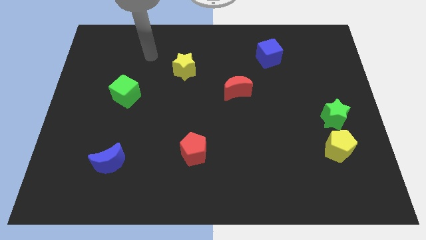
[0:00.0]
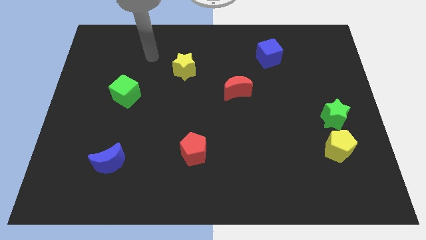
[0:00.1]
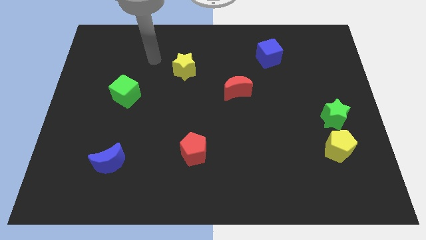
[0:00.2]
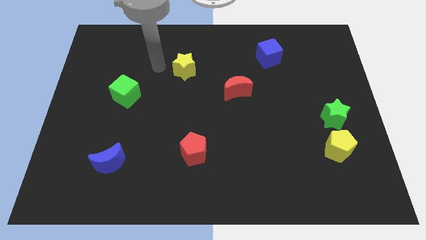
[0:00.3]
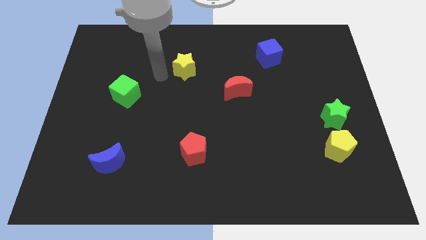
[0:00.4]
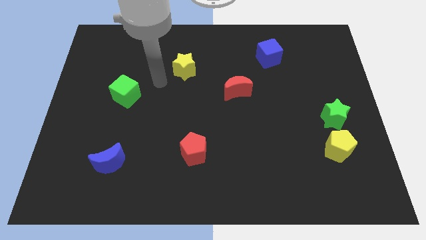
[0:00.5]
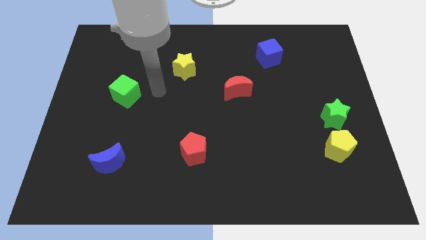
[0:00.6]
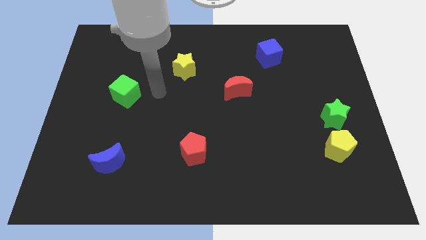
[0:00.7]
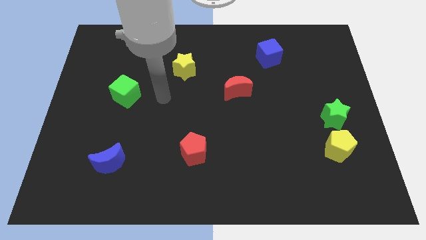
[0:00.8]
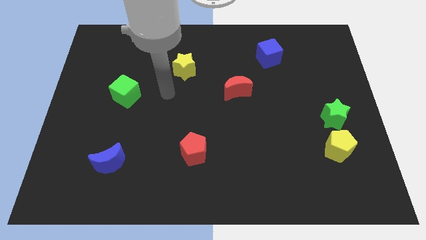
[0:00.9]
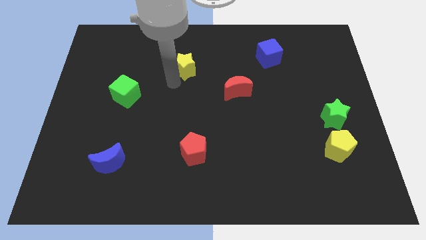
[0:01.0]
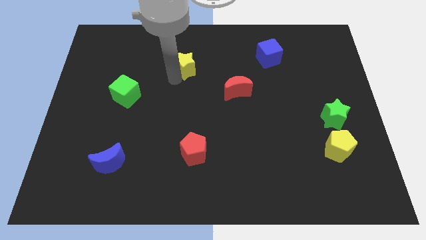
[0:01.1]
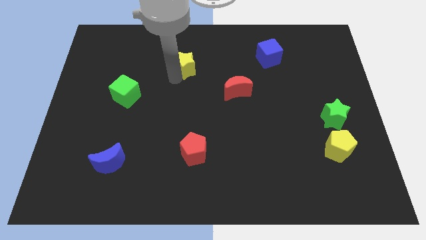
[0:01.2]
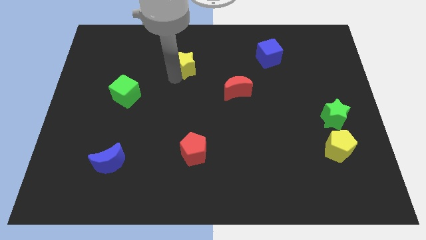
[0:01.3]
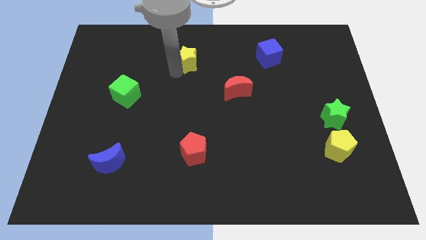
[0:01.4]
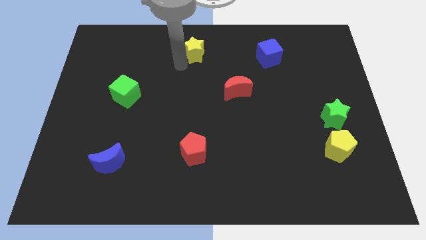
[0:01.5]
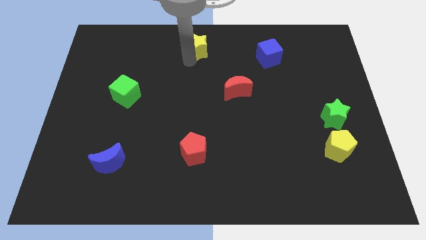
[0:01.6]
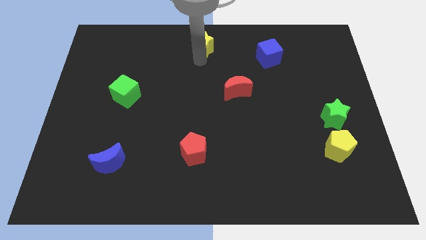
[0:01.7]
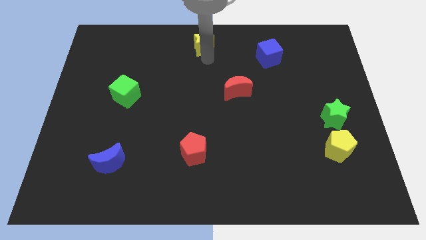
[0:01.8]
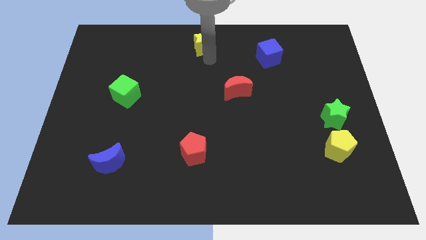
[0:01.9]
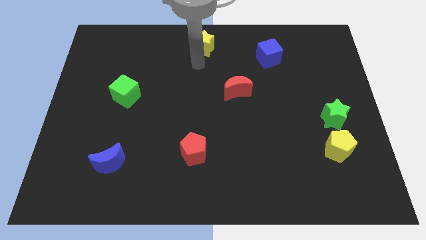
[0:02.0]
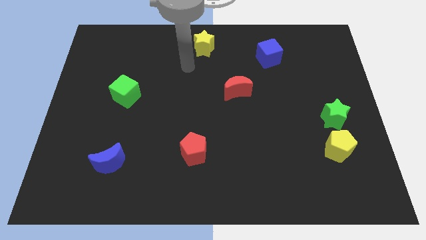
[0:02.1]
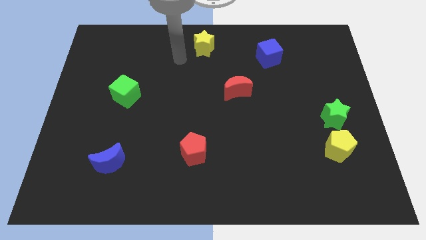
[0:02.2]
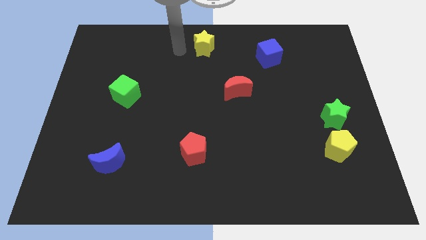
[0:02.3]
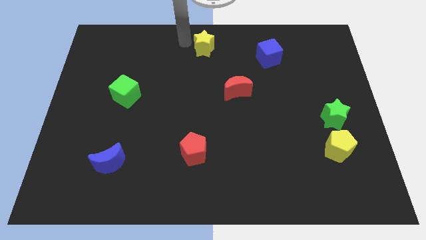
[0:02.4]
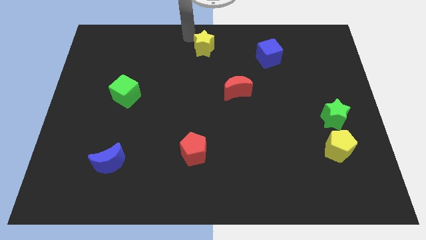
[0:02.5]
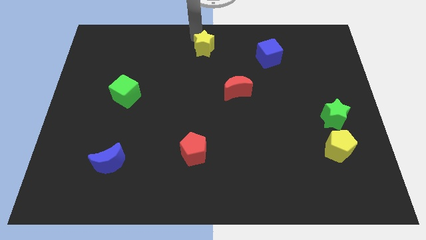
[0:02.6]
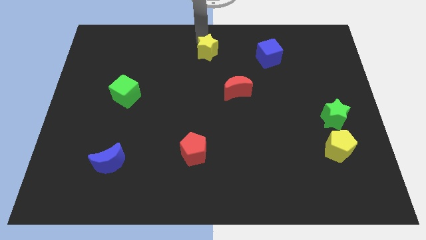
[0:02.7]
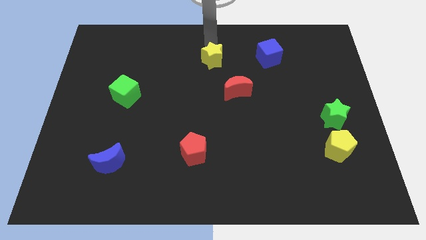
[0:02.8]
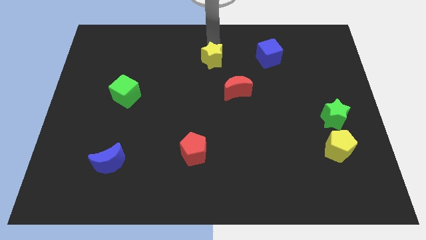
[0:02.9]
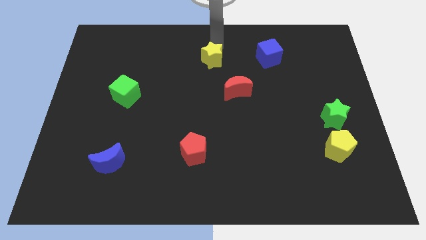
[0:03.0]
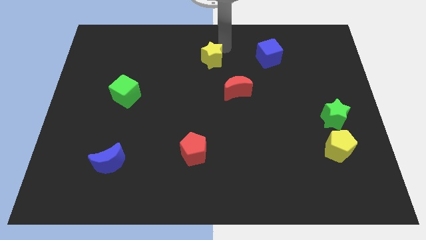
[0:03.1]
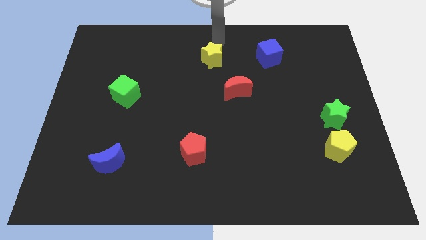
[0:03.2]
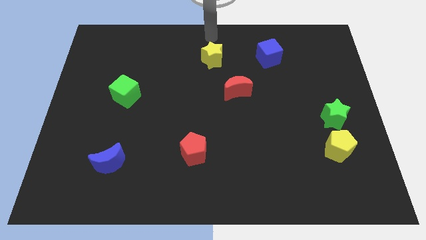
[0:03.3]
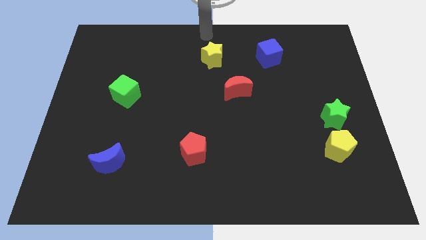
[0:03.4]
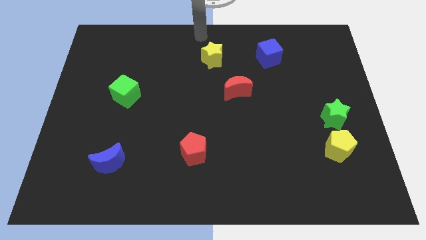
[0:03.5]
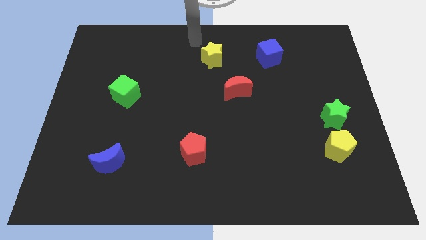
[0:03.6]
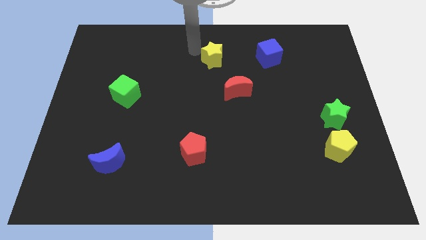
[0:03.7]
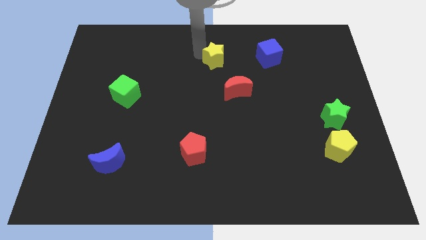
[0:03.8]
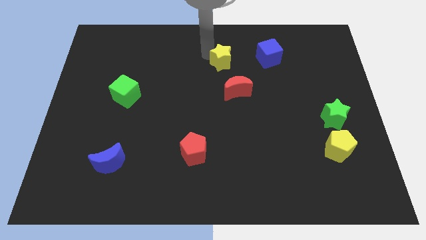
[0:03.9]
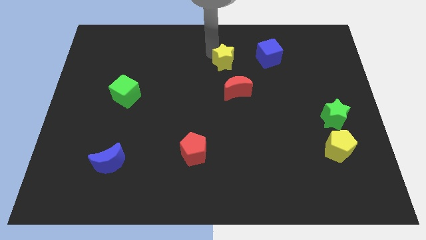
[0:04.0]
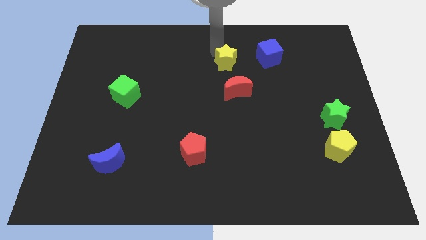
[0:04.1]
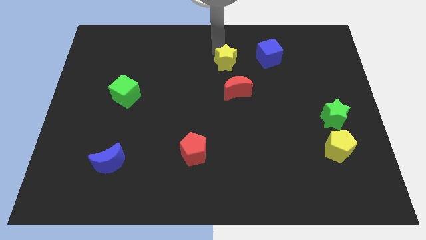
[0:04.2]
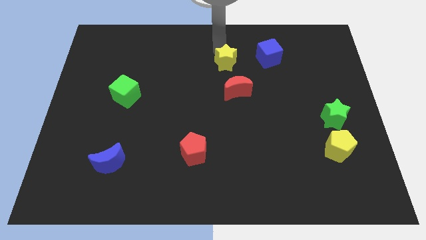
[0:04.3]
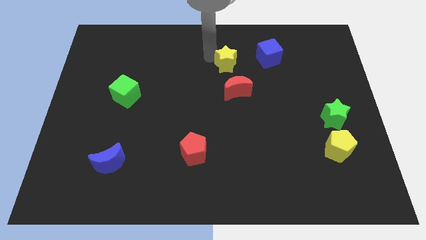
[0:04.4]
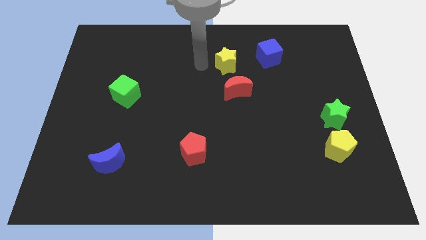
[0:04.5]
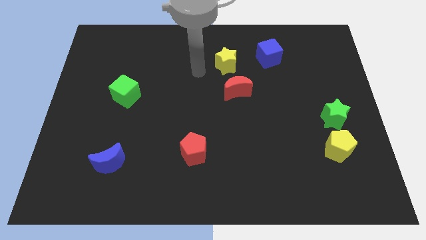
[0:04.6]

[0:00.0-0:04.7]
move the yellow star to the top of the red crescent

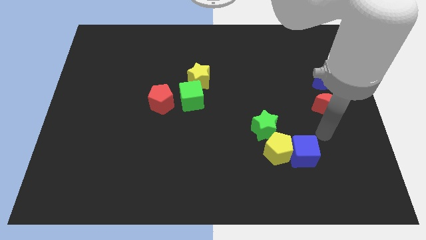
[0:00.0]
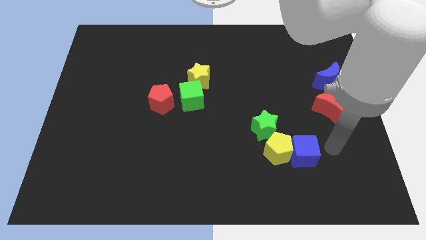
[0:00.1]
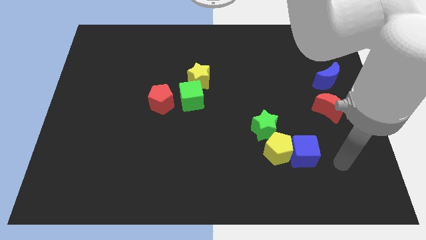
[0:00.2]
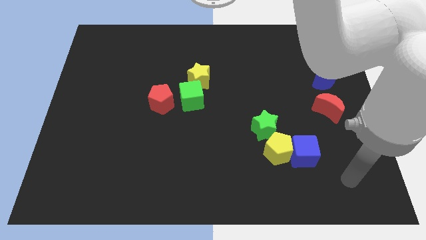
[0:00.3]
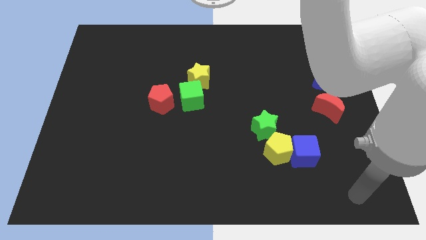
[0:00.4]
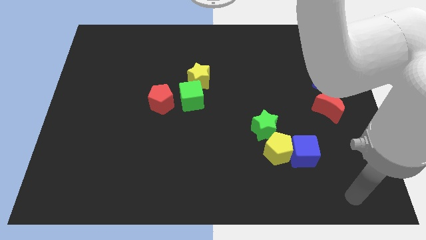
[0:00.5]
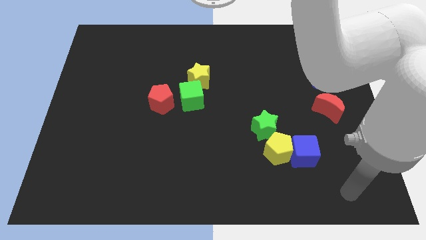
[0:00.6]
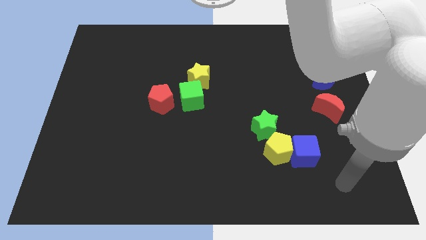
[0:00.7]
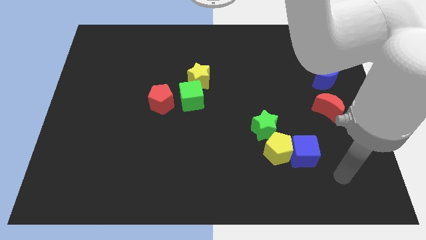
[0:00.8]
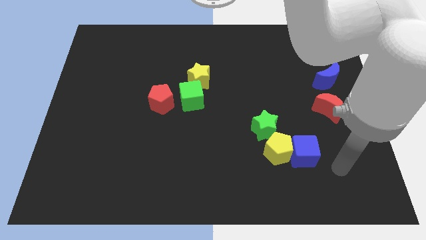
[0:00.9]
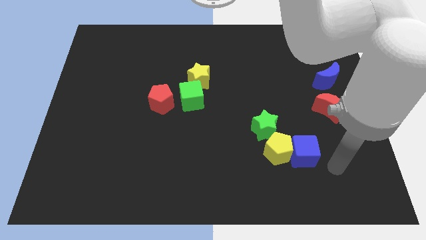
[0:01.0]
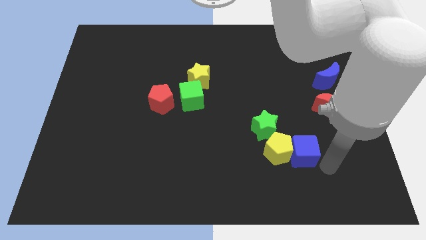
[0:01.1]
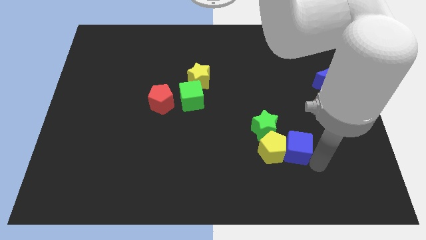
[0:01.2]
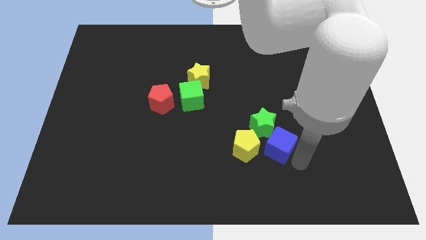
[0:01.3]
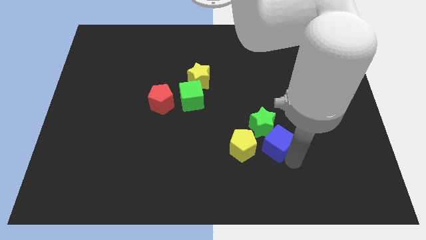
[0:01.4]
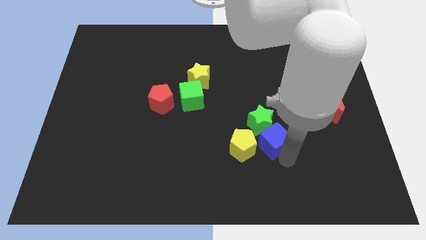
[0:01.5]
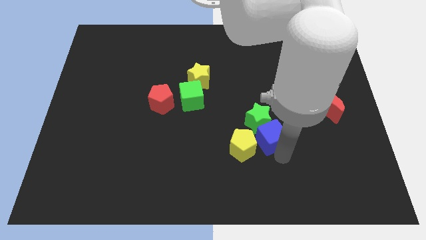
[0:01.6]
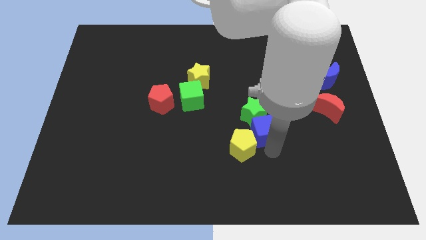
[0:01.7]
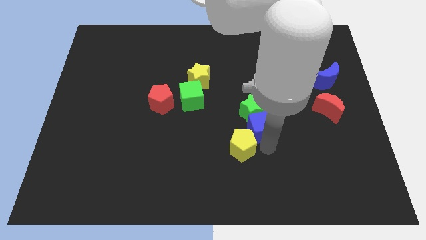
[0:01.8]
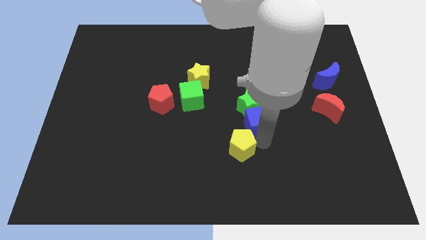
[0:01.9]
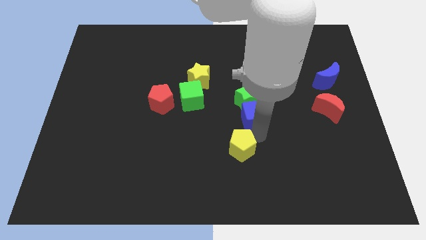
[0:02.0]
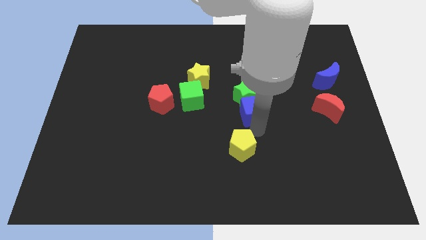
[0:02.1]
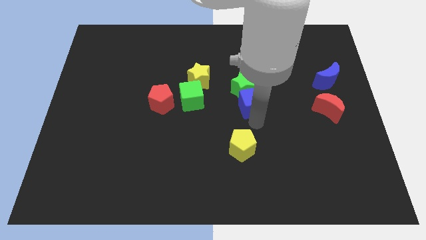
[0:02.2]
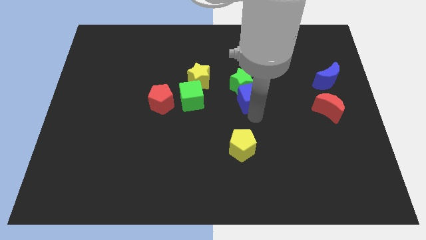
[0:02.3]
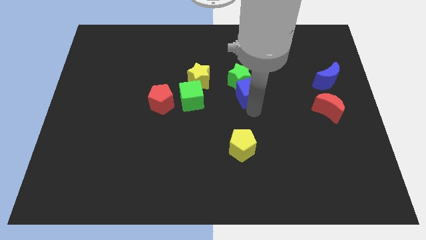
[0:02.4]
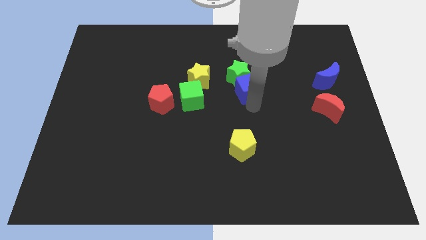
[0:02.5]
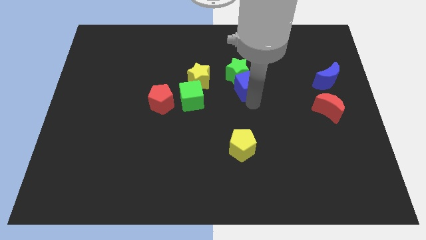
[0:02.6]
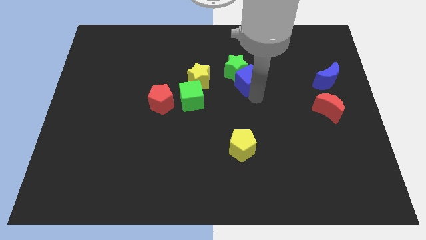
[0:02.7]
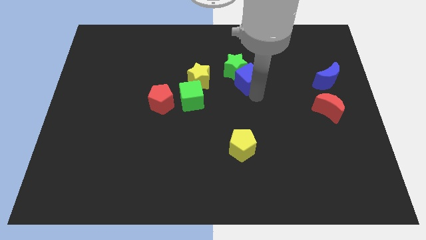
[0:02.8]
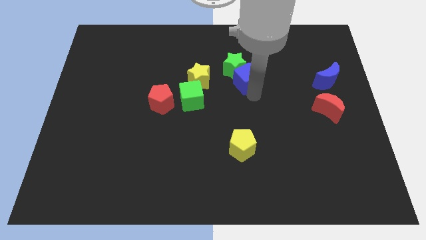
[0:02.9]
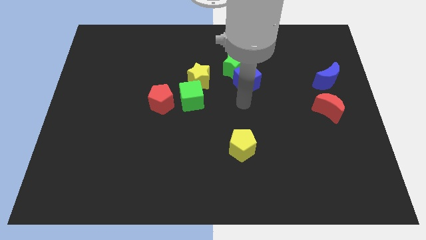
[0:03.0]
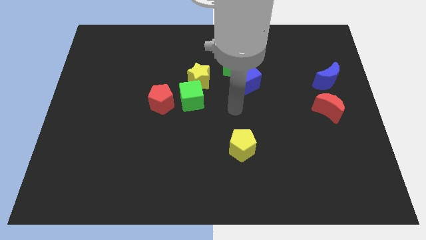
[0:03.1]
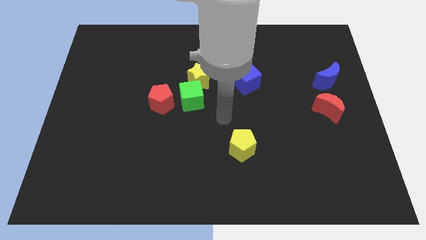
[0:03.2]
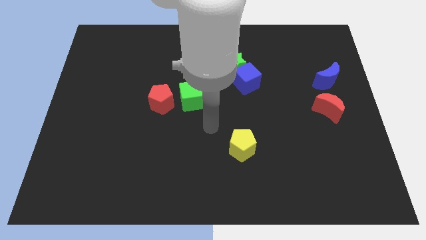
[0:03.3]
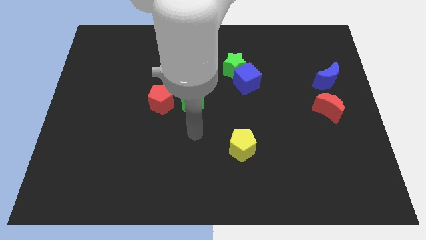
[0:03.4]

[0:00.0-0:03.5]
push the blue cube along with the green star to the top center of th e board

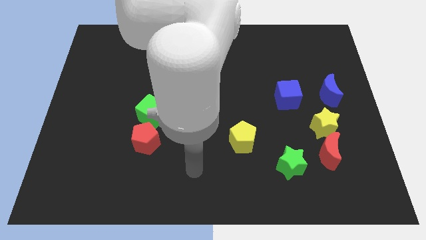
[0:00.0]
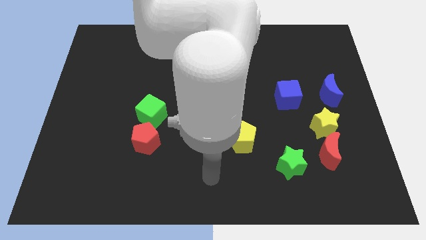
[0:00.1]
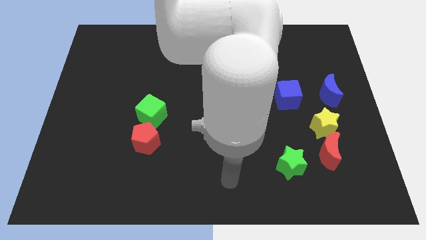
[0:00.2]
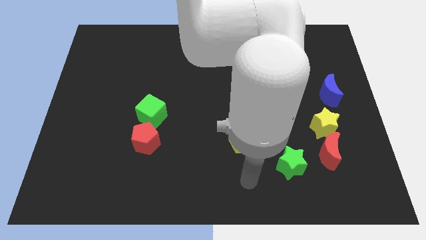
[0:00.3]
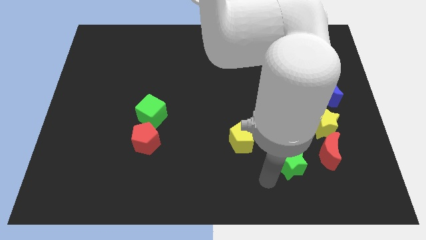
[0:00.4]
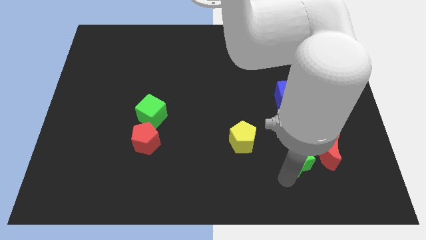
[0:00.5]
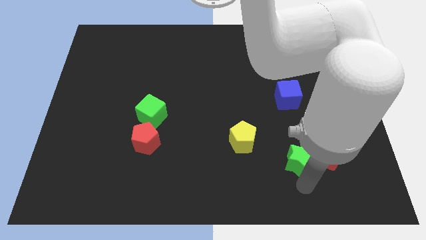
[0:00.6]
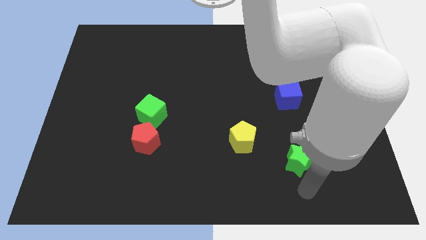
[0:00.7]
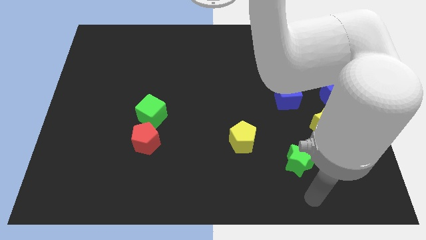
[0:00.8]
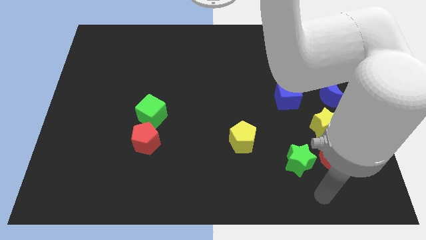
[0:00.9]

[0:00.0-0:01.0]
push the green star towards the left side of red moon
